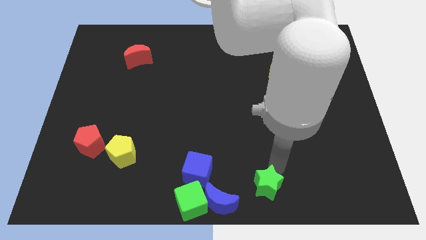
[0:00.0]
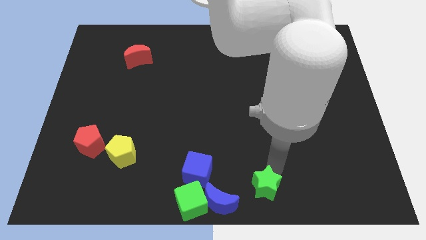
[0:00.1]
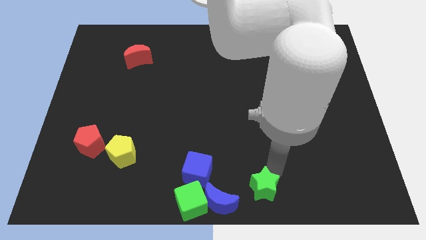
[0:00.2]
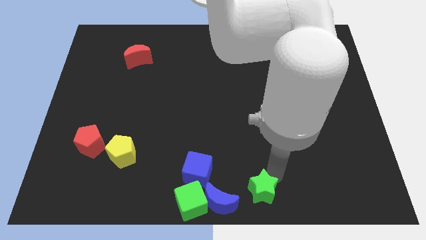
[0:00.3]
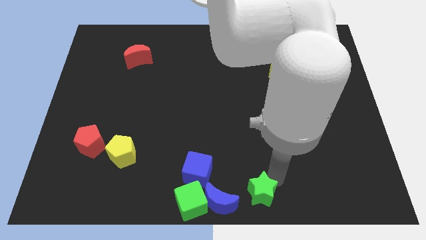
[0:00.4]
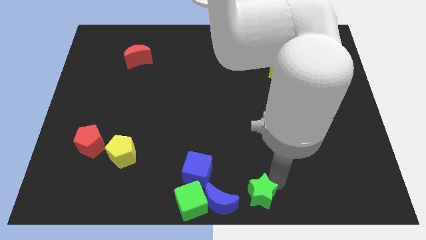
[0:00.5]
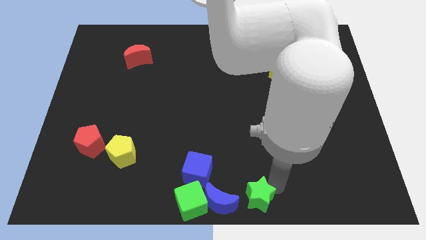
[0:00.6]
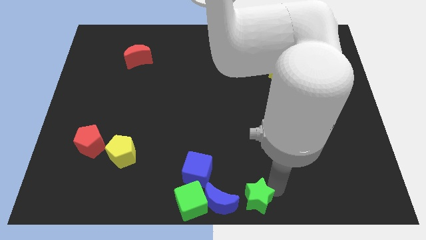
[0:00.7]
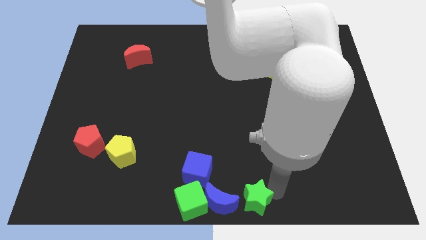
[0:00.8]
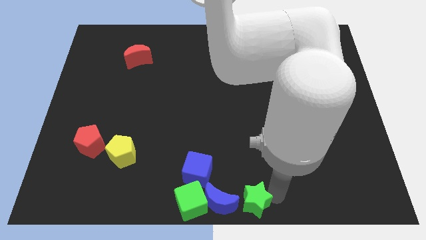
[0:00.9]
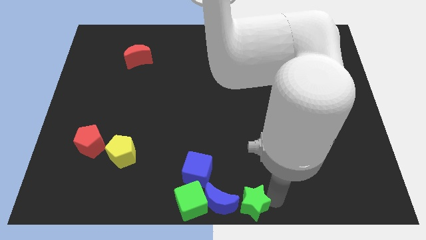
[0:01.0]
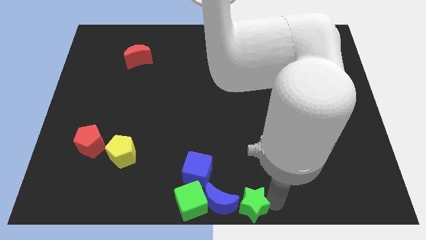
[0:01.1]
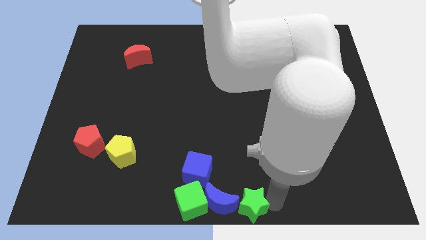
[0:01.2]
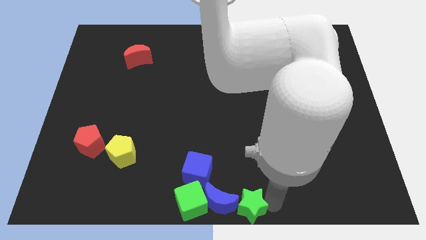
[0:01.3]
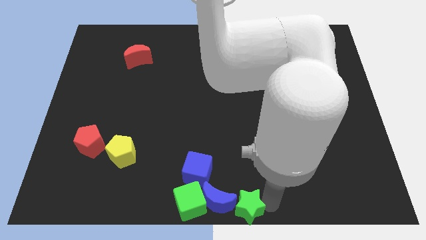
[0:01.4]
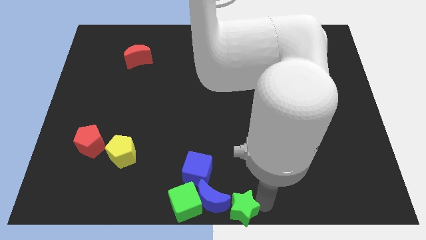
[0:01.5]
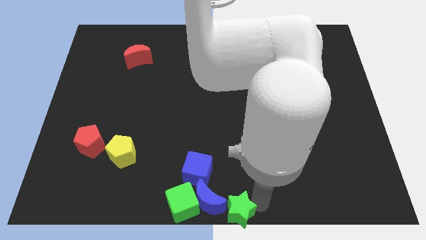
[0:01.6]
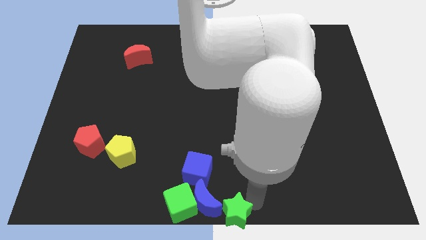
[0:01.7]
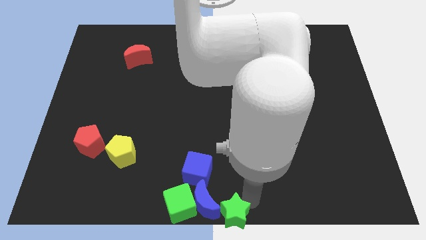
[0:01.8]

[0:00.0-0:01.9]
place the green star to the right of the blue crescent

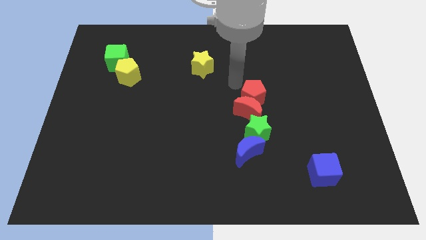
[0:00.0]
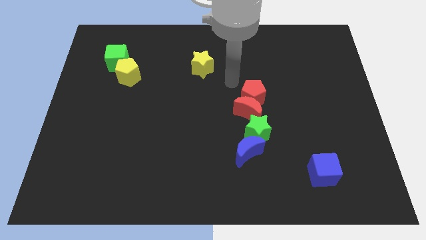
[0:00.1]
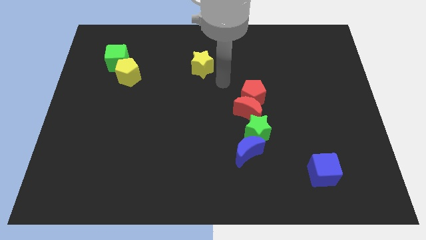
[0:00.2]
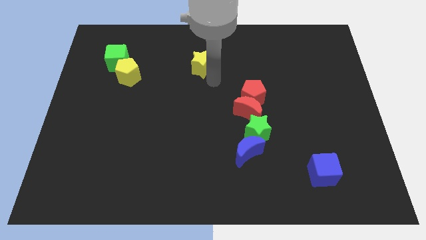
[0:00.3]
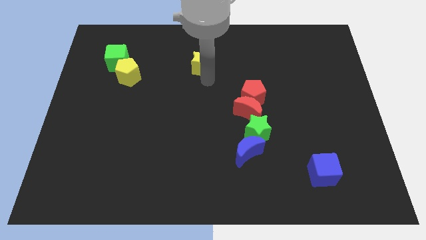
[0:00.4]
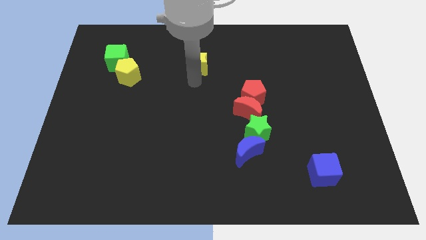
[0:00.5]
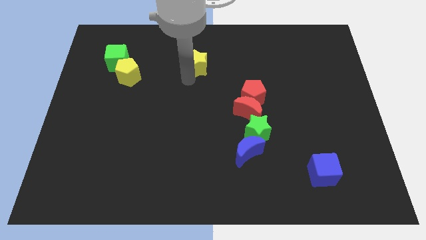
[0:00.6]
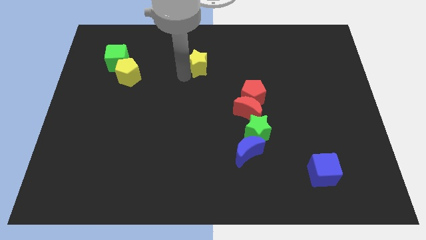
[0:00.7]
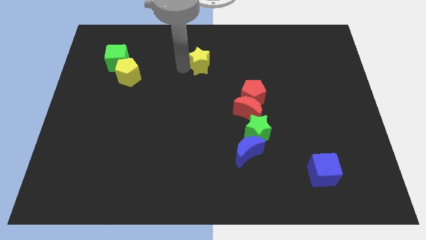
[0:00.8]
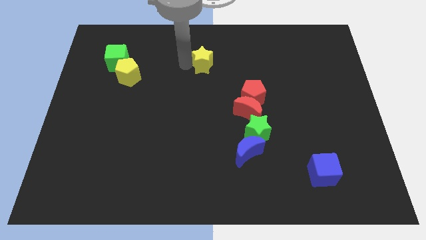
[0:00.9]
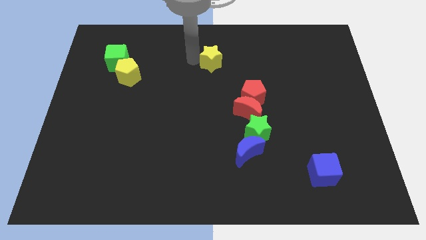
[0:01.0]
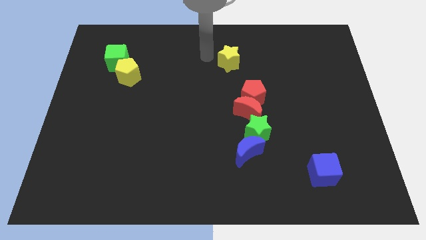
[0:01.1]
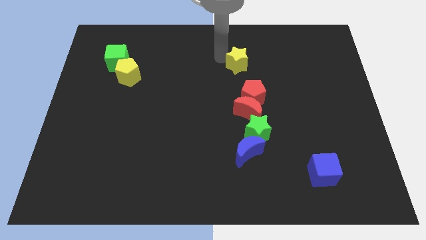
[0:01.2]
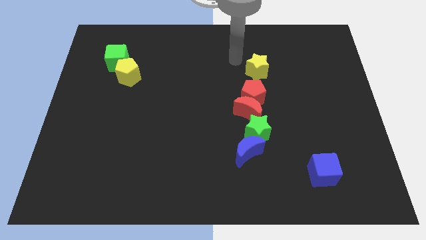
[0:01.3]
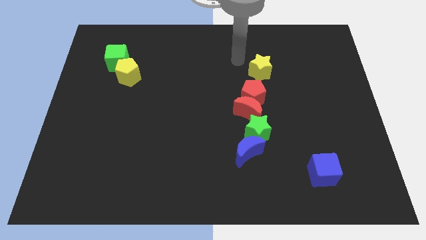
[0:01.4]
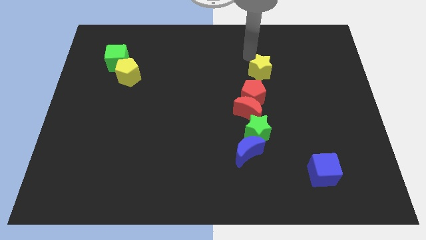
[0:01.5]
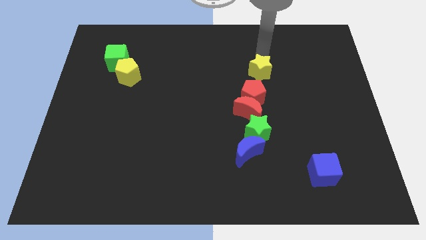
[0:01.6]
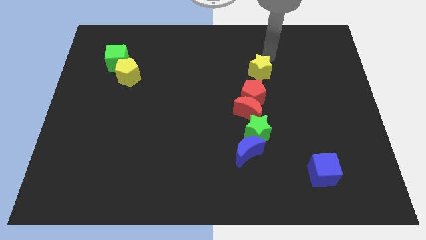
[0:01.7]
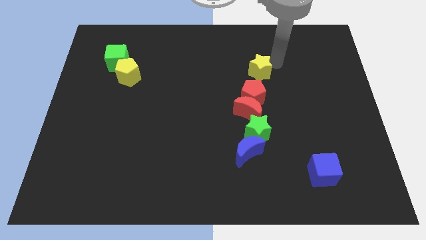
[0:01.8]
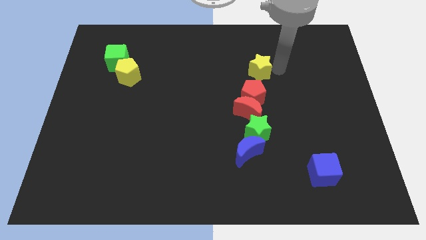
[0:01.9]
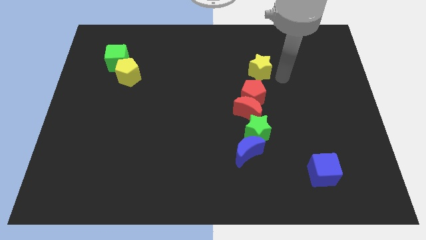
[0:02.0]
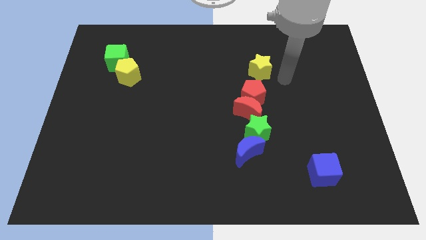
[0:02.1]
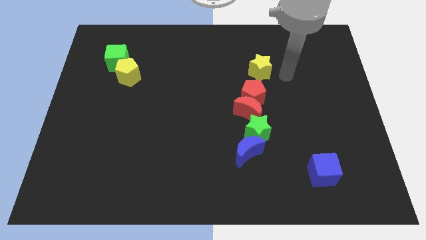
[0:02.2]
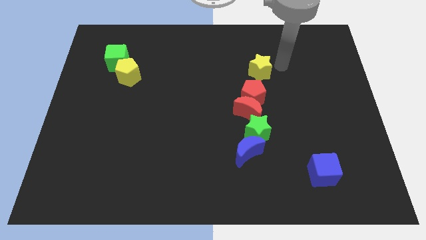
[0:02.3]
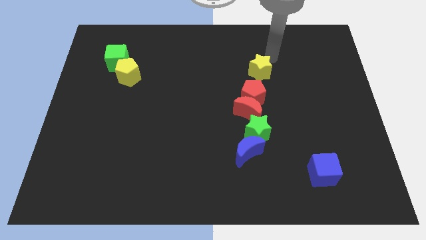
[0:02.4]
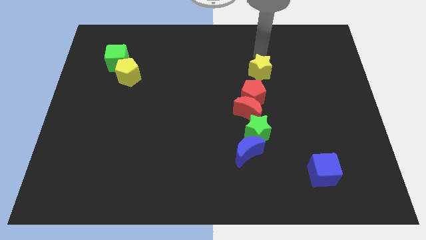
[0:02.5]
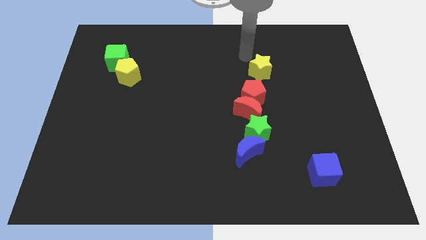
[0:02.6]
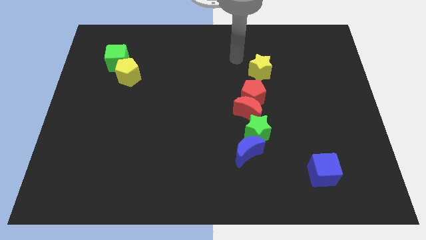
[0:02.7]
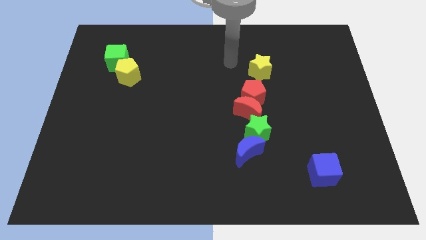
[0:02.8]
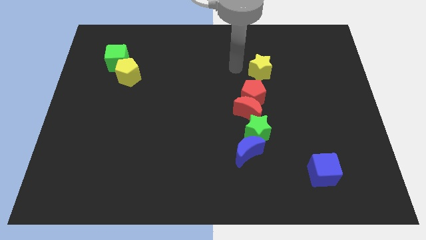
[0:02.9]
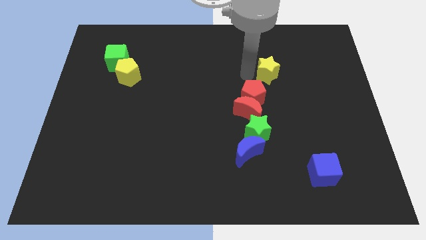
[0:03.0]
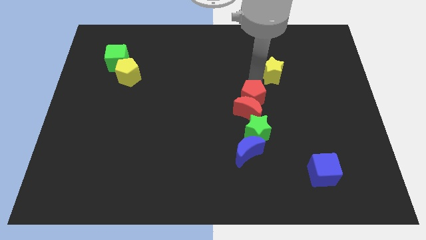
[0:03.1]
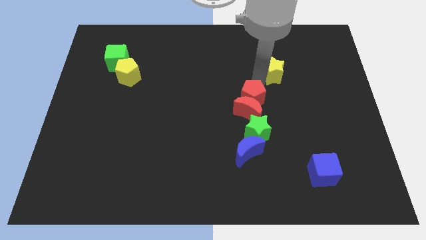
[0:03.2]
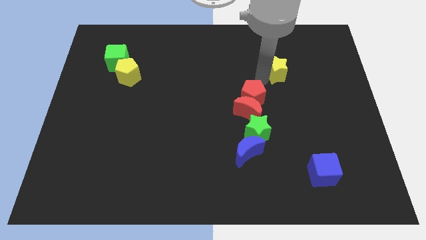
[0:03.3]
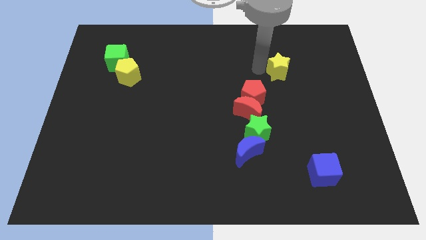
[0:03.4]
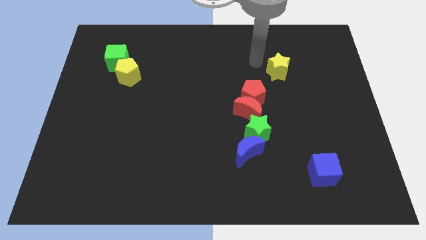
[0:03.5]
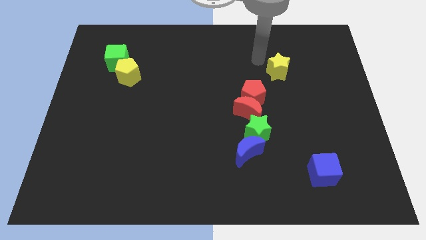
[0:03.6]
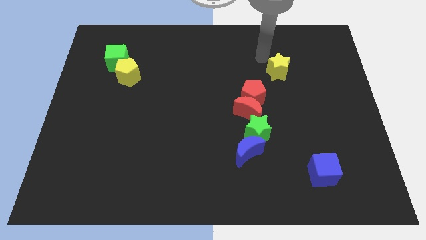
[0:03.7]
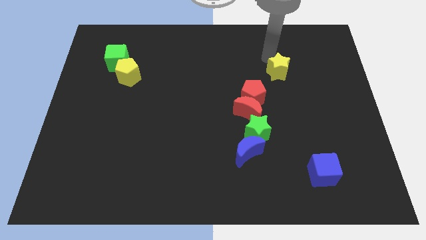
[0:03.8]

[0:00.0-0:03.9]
move the yellow star towards the right

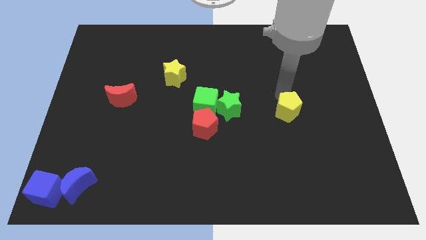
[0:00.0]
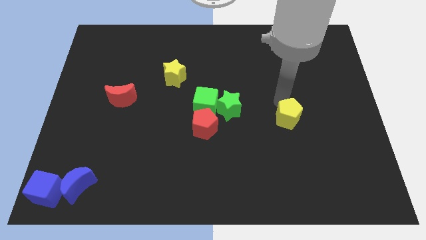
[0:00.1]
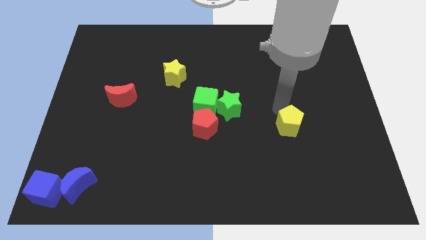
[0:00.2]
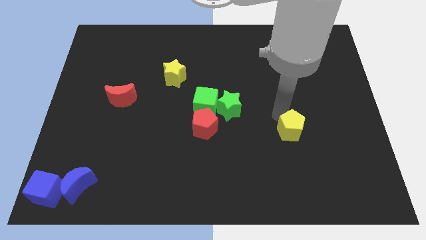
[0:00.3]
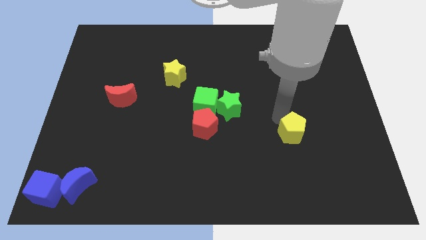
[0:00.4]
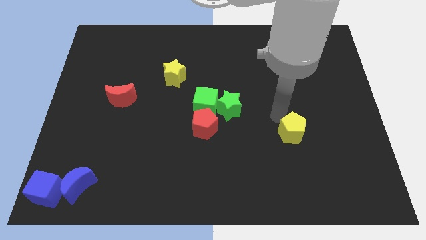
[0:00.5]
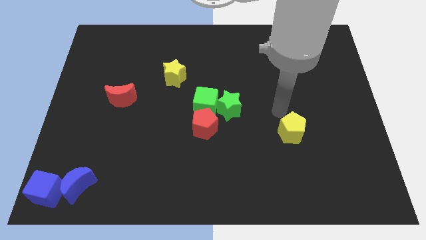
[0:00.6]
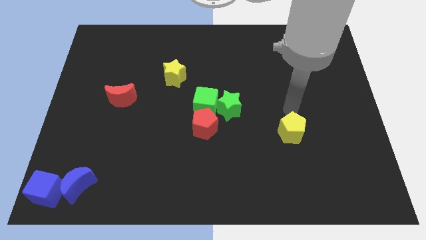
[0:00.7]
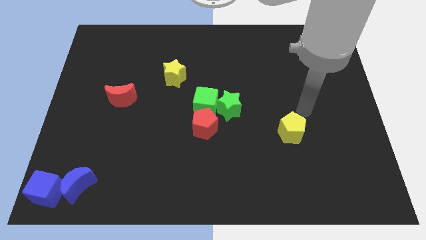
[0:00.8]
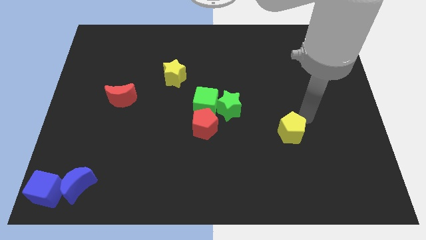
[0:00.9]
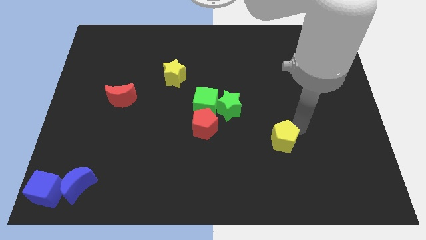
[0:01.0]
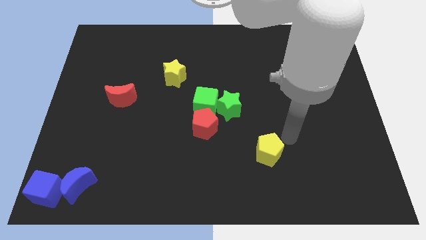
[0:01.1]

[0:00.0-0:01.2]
push the yellow pentagon to the bottom of the board

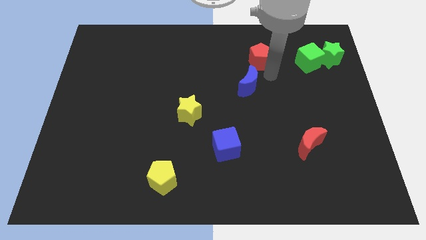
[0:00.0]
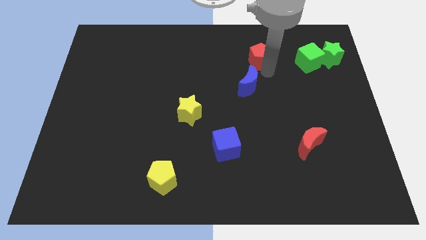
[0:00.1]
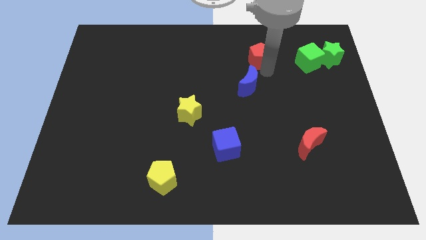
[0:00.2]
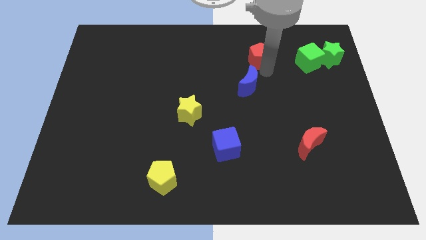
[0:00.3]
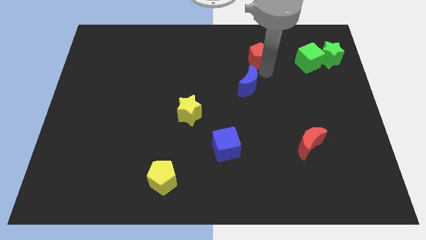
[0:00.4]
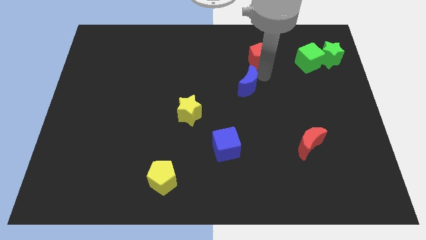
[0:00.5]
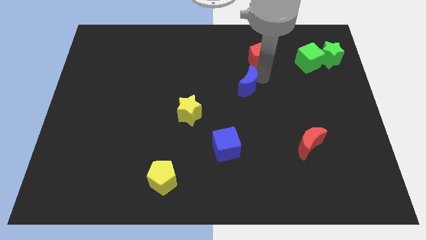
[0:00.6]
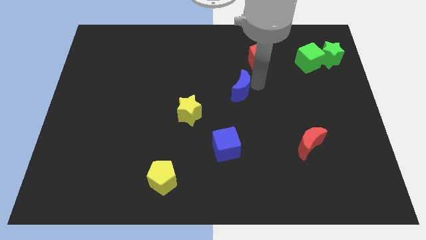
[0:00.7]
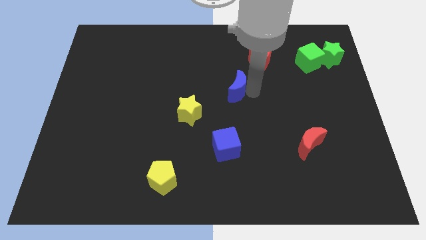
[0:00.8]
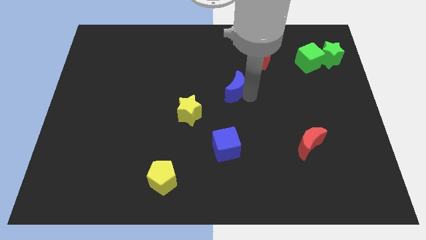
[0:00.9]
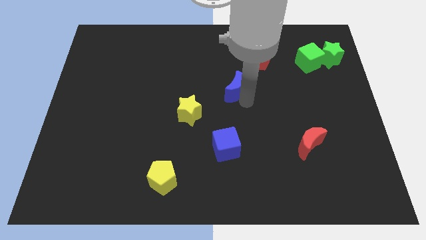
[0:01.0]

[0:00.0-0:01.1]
separate blue moon from red pentagon

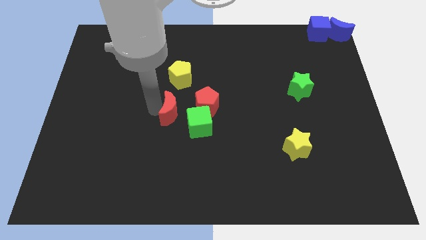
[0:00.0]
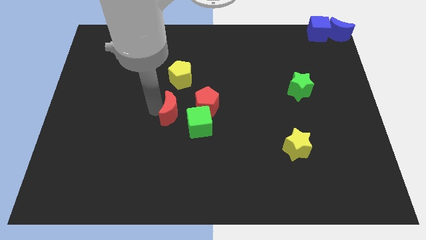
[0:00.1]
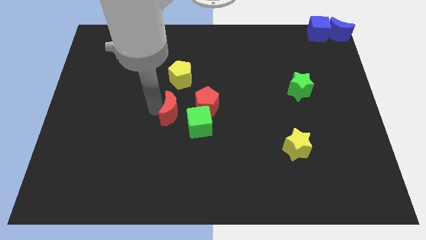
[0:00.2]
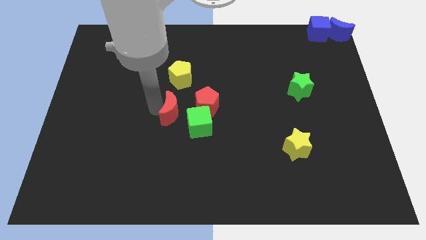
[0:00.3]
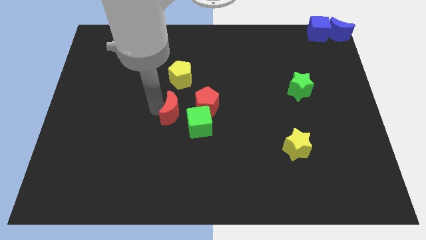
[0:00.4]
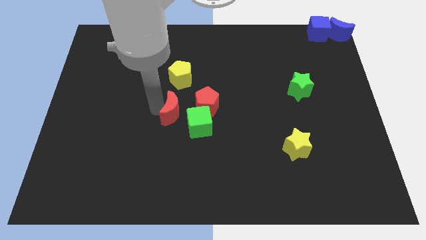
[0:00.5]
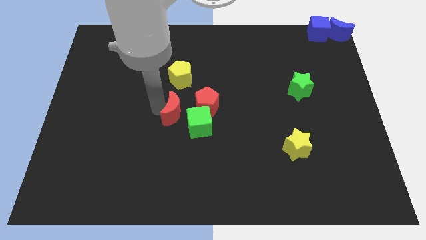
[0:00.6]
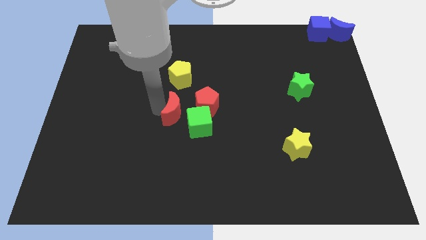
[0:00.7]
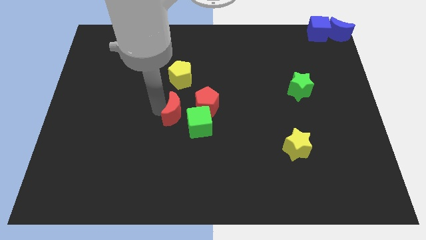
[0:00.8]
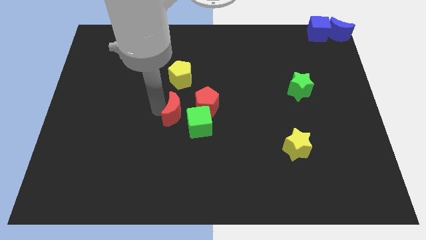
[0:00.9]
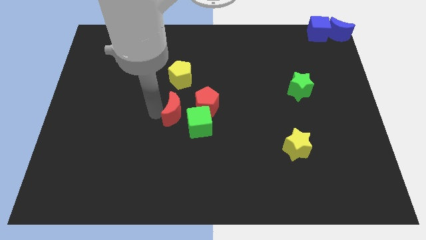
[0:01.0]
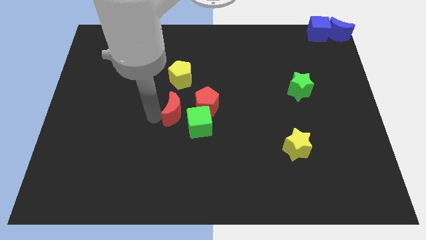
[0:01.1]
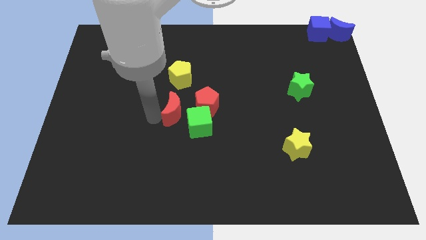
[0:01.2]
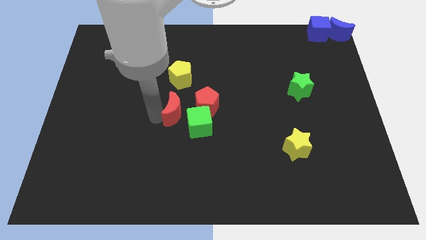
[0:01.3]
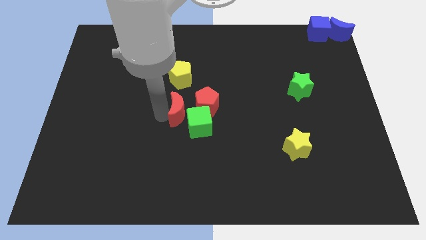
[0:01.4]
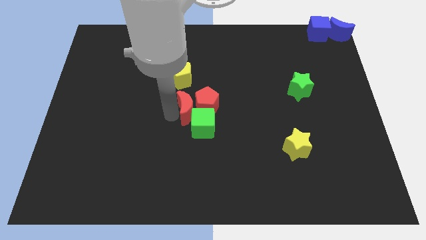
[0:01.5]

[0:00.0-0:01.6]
push the red crescent to the top left of the green cube
